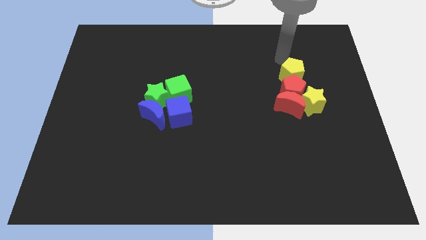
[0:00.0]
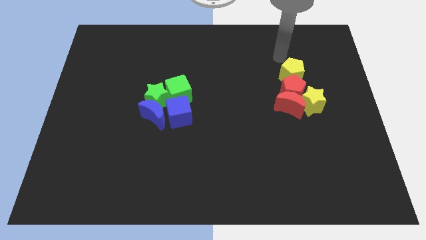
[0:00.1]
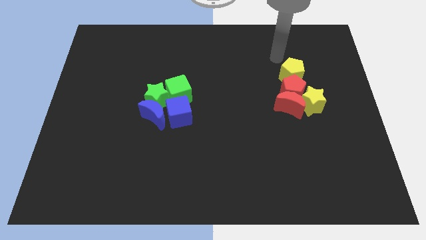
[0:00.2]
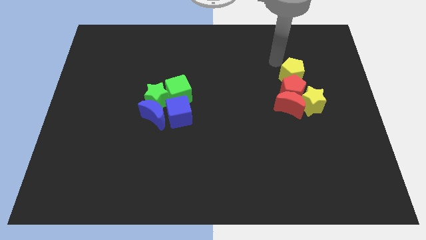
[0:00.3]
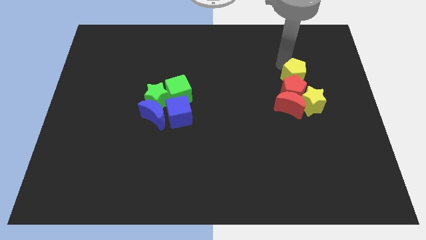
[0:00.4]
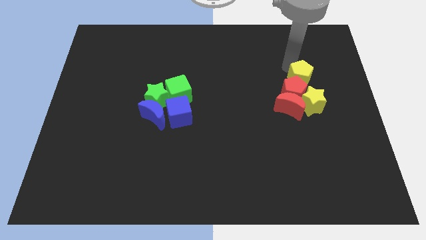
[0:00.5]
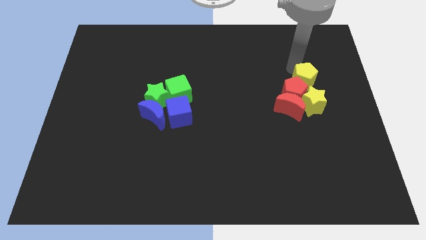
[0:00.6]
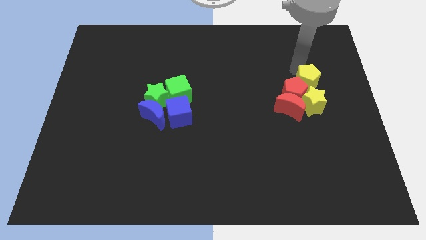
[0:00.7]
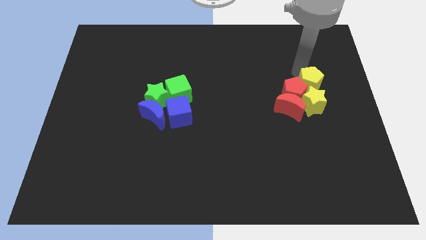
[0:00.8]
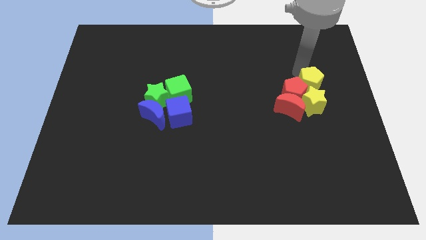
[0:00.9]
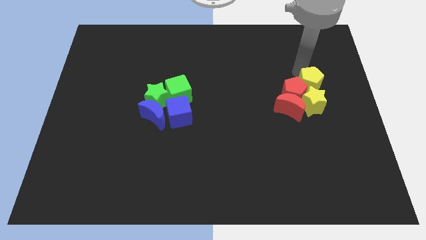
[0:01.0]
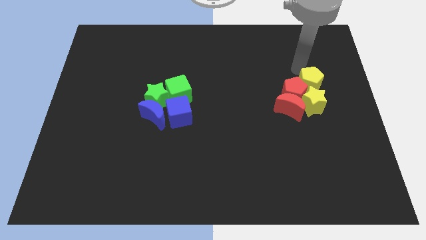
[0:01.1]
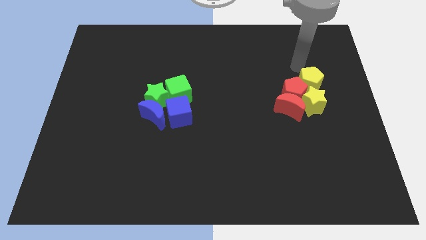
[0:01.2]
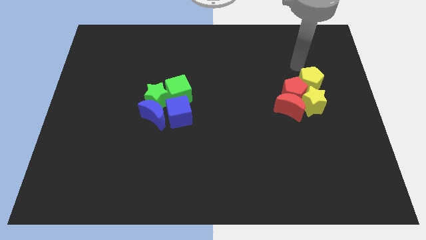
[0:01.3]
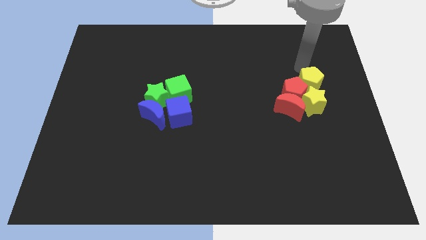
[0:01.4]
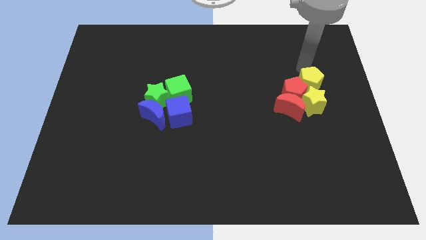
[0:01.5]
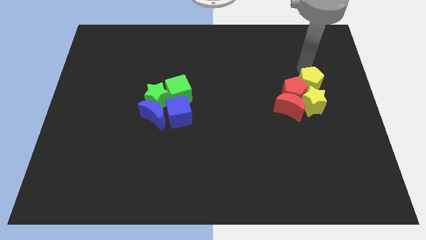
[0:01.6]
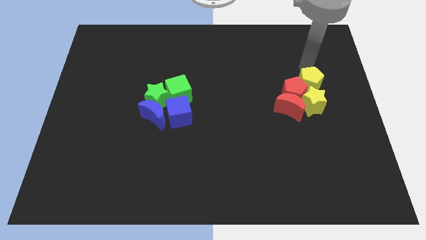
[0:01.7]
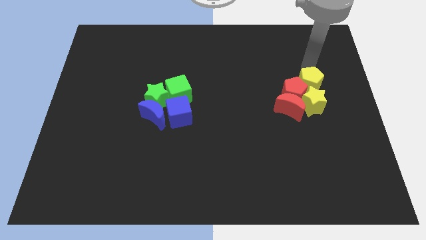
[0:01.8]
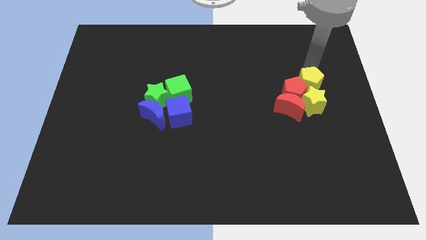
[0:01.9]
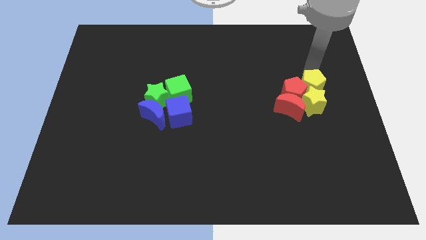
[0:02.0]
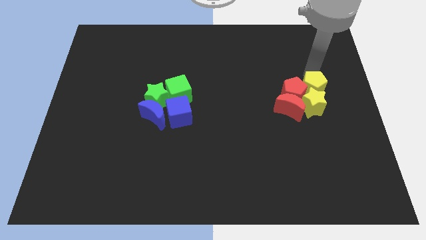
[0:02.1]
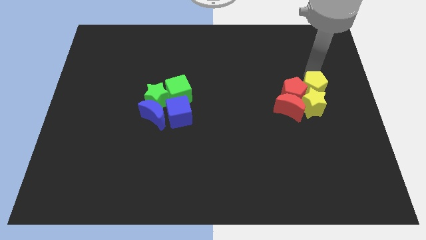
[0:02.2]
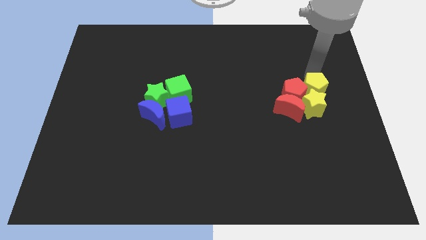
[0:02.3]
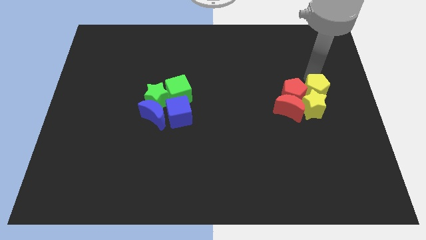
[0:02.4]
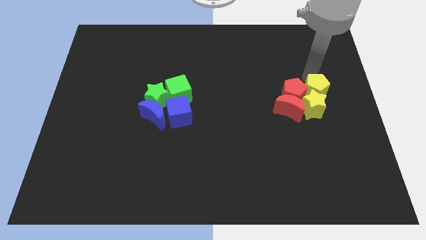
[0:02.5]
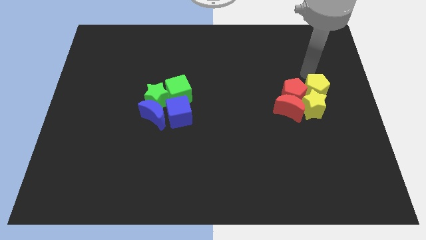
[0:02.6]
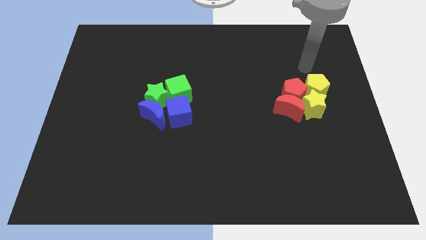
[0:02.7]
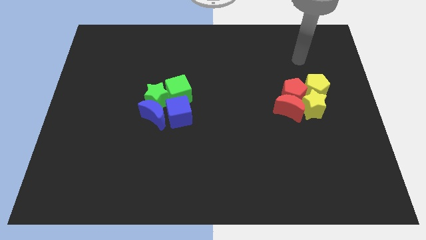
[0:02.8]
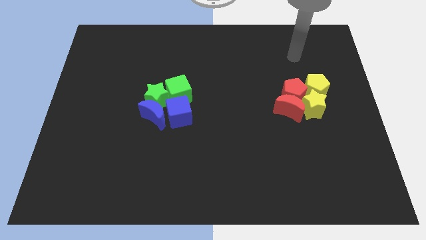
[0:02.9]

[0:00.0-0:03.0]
push the yellow pentagon into the group of red and yellow blocks

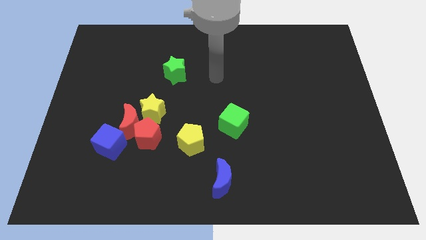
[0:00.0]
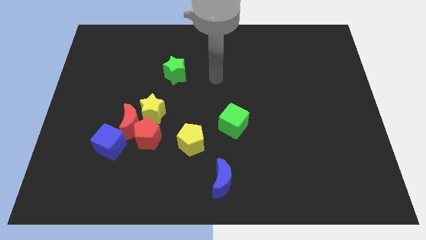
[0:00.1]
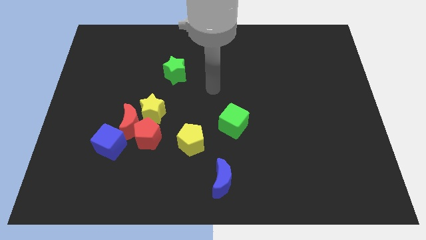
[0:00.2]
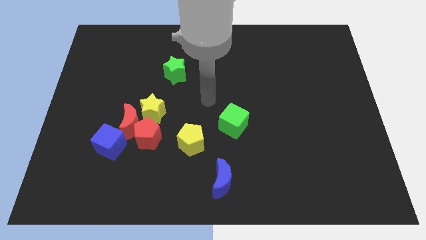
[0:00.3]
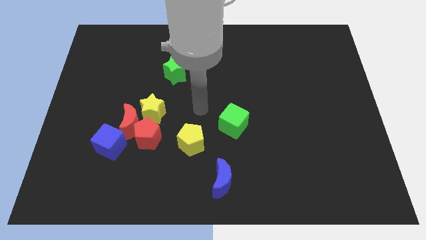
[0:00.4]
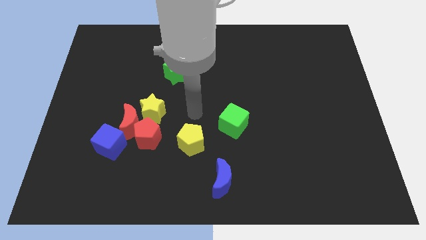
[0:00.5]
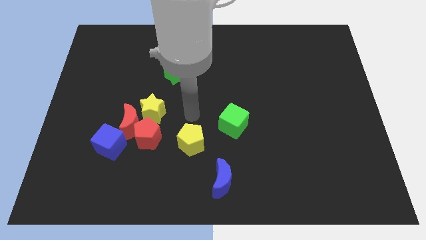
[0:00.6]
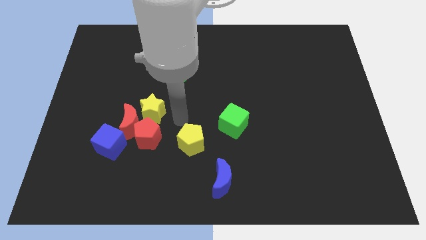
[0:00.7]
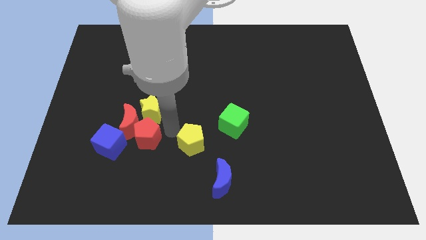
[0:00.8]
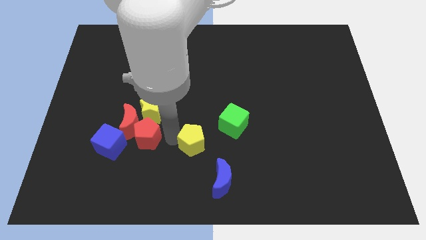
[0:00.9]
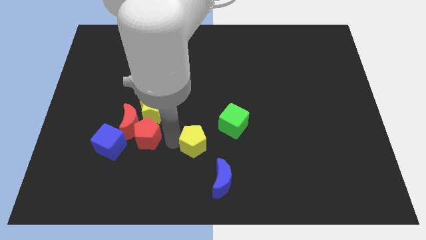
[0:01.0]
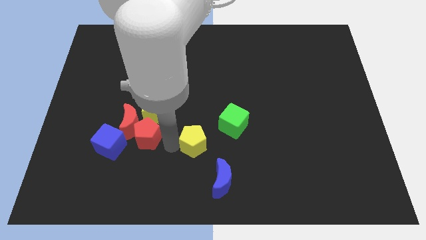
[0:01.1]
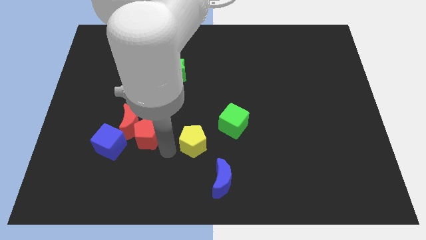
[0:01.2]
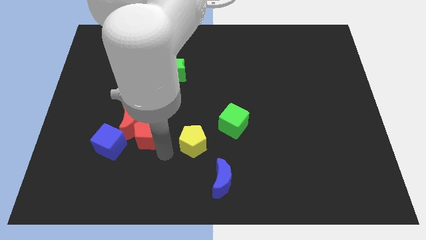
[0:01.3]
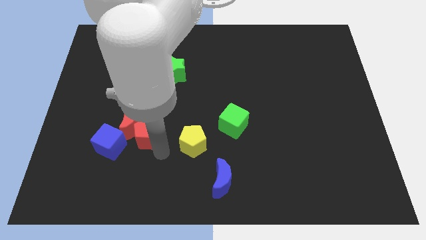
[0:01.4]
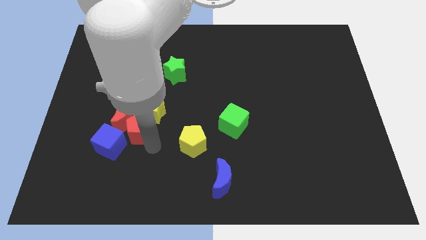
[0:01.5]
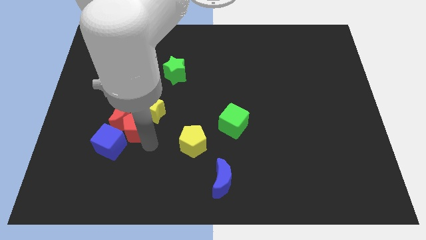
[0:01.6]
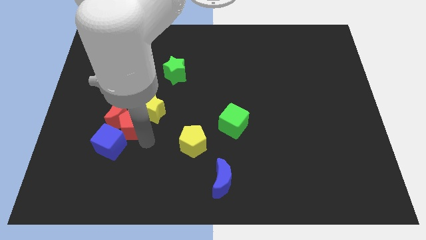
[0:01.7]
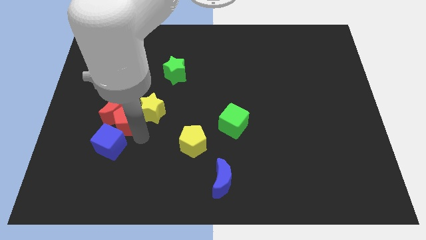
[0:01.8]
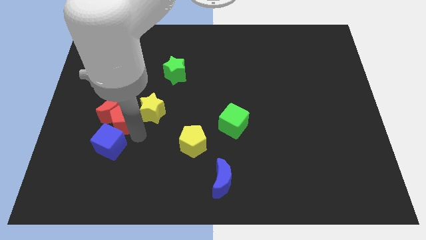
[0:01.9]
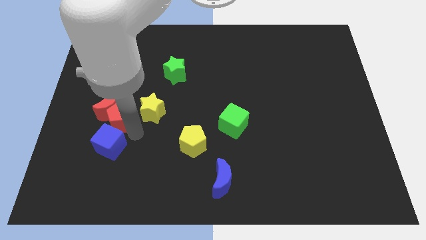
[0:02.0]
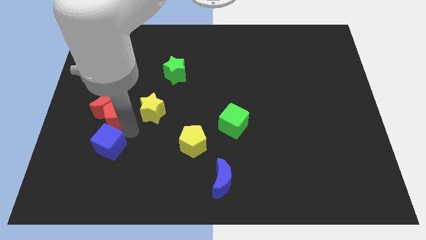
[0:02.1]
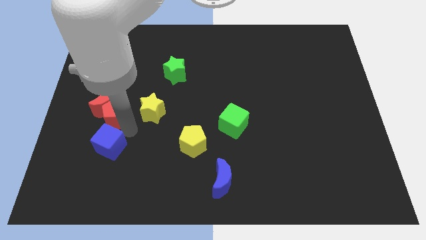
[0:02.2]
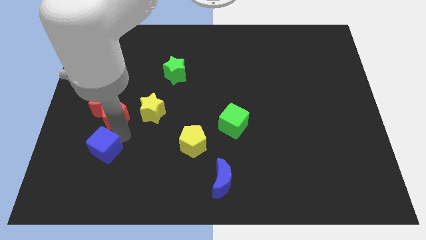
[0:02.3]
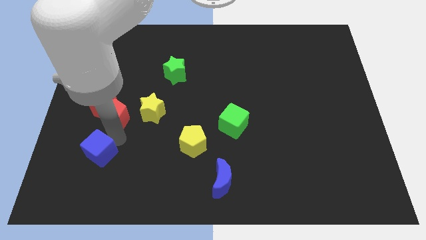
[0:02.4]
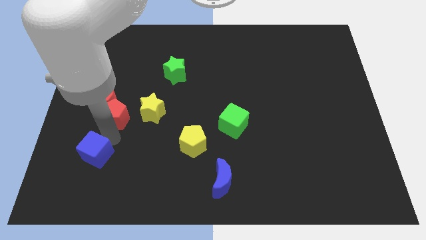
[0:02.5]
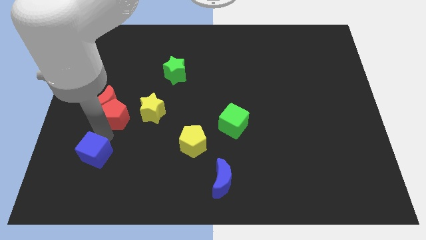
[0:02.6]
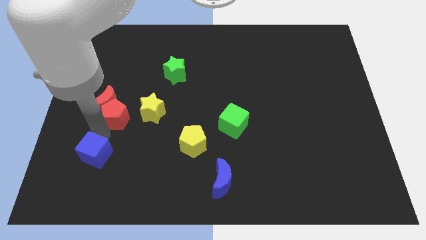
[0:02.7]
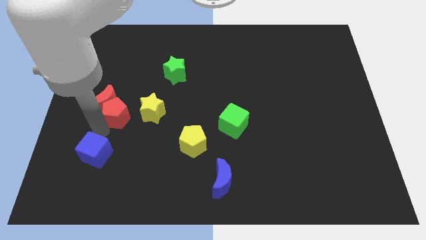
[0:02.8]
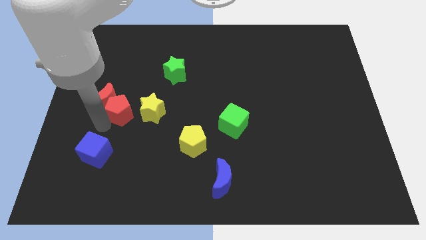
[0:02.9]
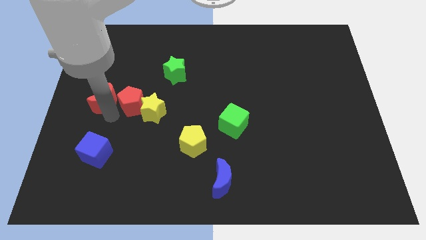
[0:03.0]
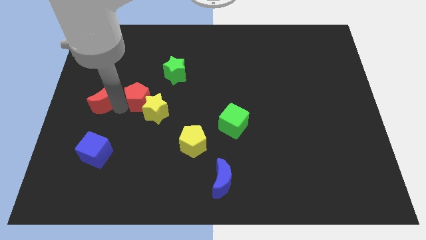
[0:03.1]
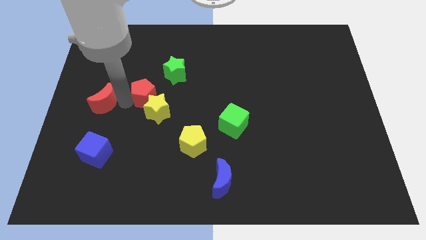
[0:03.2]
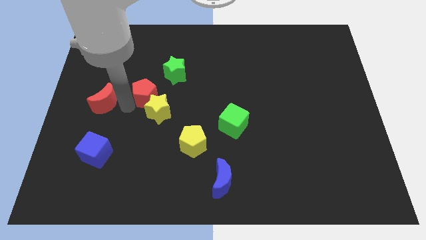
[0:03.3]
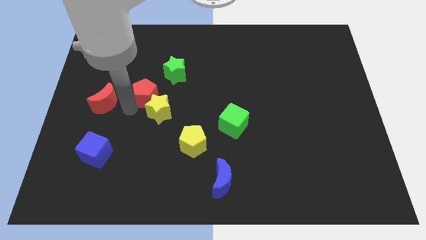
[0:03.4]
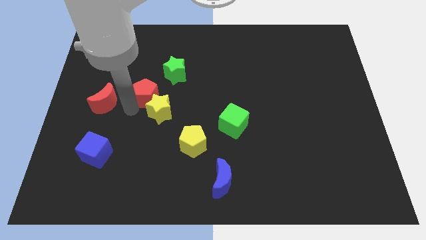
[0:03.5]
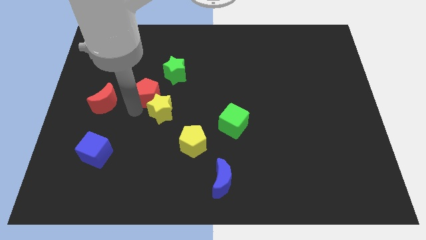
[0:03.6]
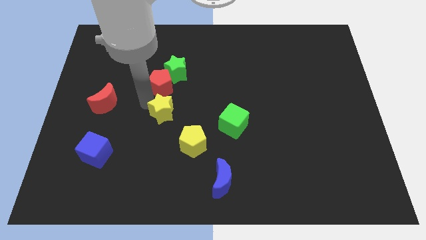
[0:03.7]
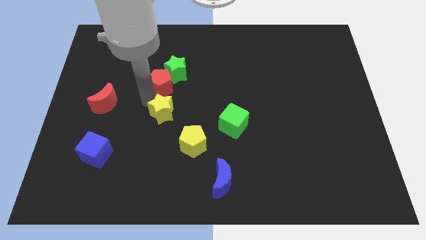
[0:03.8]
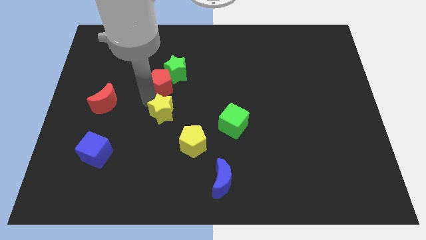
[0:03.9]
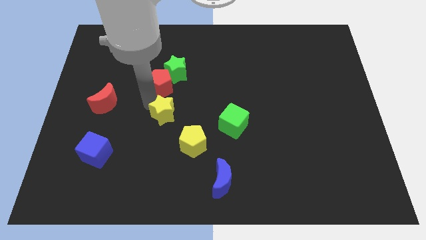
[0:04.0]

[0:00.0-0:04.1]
move the red pentagon between the green star and yellow star

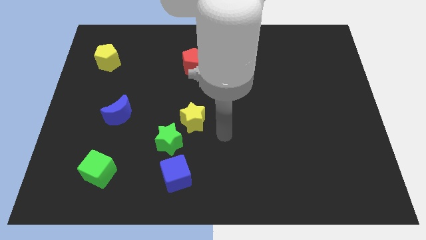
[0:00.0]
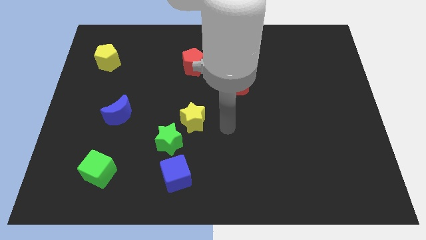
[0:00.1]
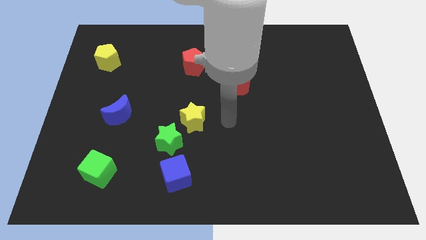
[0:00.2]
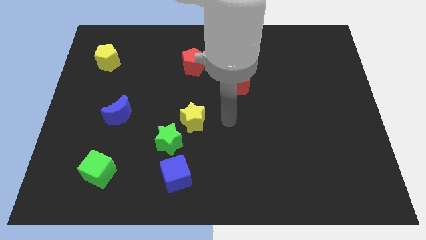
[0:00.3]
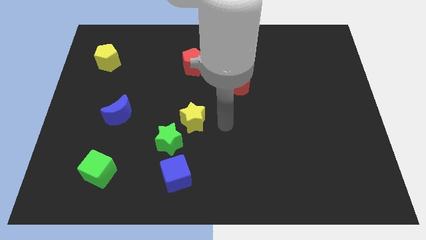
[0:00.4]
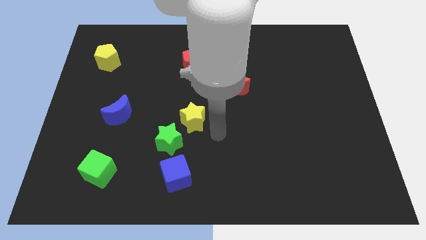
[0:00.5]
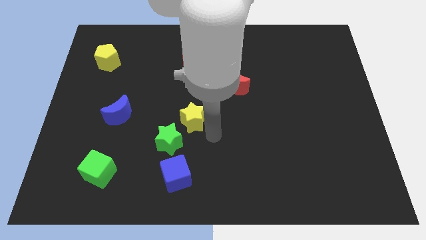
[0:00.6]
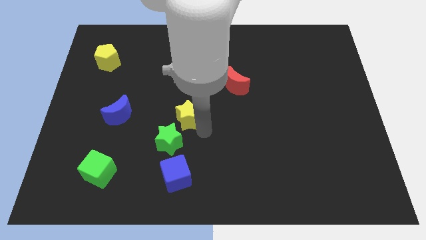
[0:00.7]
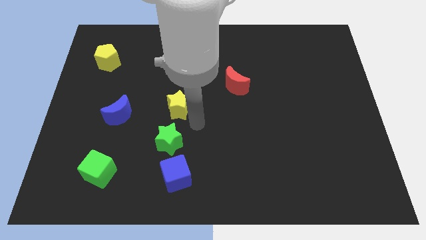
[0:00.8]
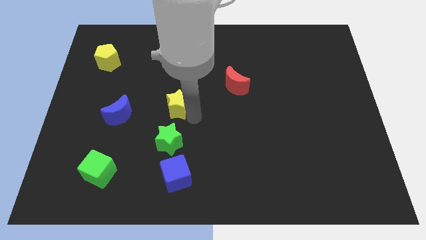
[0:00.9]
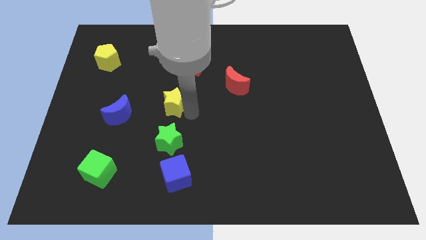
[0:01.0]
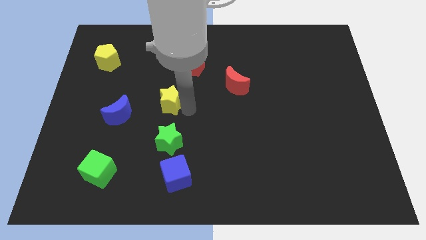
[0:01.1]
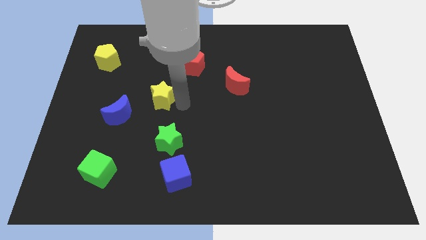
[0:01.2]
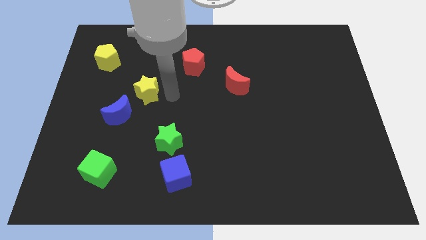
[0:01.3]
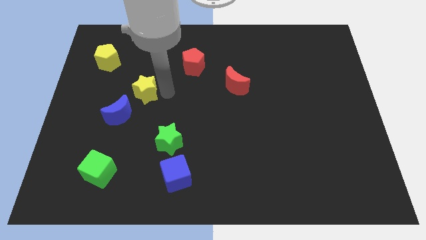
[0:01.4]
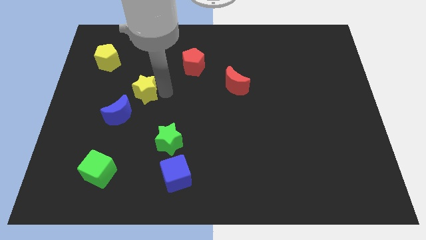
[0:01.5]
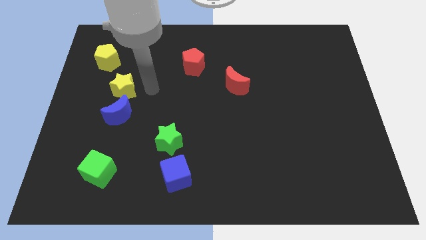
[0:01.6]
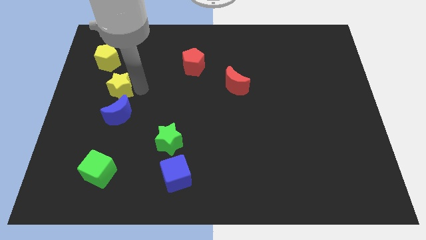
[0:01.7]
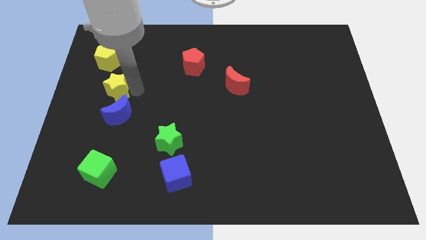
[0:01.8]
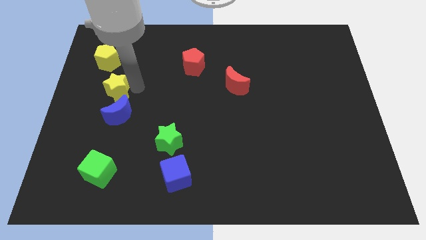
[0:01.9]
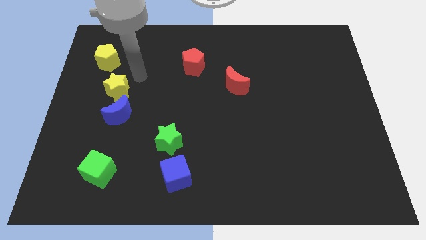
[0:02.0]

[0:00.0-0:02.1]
put the yellow star above the blue moon
